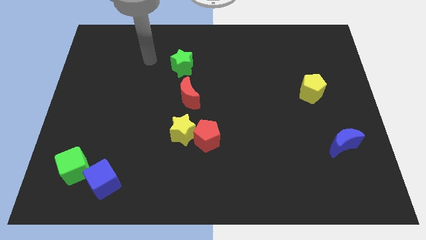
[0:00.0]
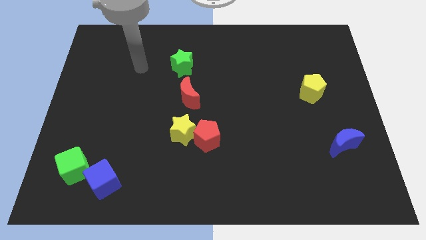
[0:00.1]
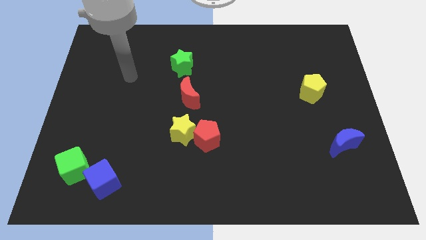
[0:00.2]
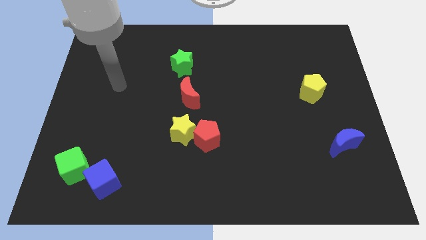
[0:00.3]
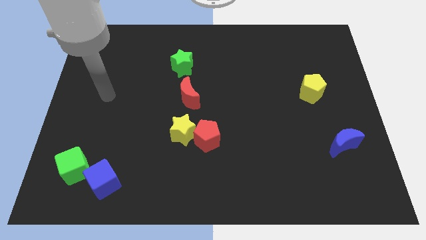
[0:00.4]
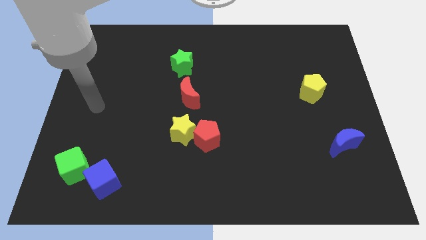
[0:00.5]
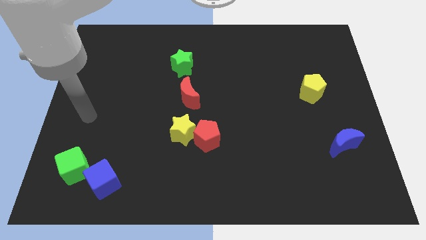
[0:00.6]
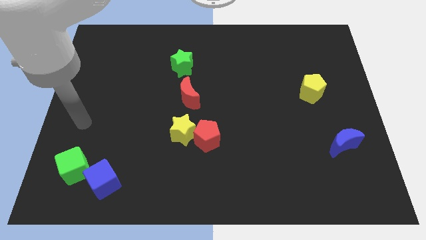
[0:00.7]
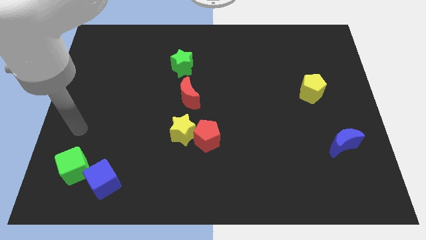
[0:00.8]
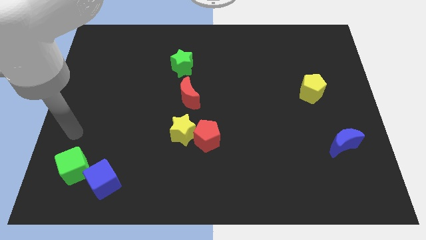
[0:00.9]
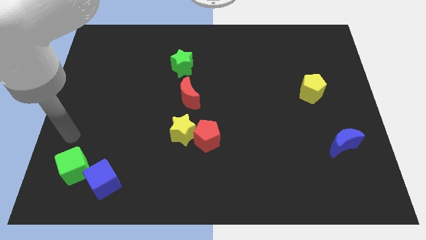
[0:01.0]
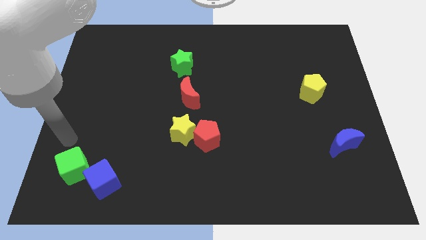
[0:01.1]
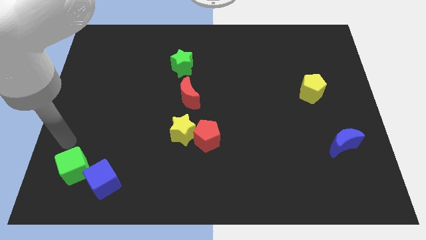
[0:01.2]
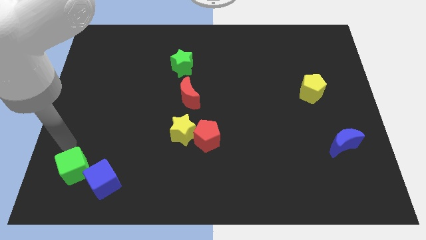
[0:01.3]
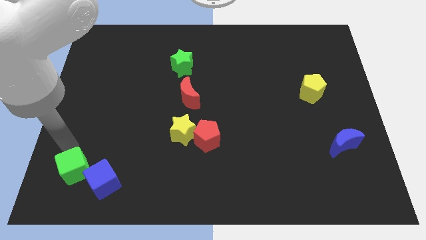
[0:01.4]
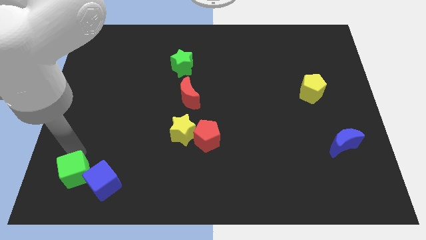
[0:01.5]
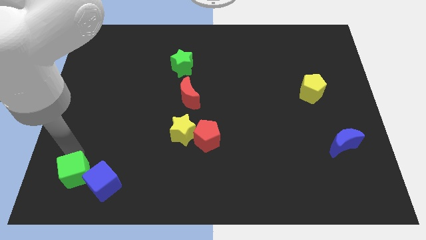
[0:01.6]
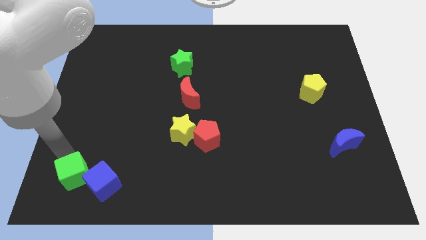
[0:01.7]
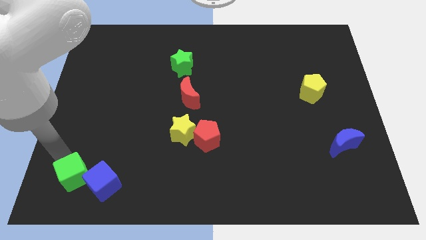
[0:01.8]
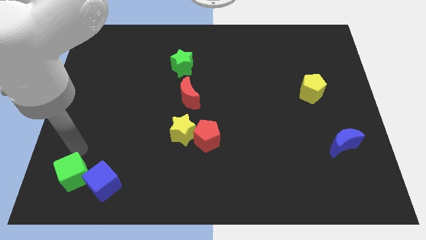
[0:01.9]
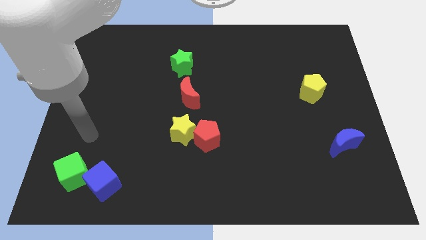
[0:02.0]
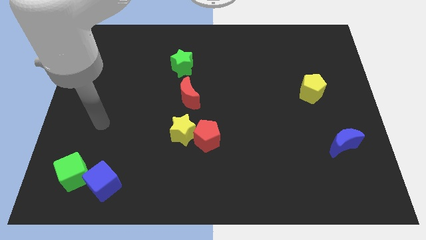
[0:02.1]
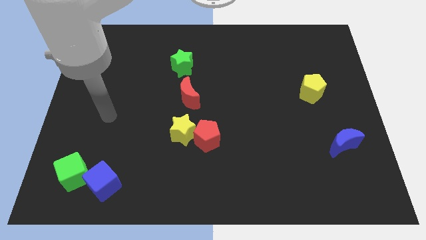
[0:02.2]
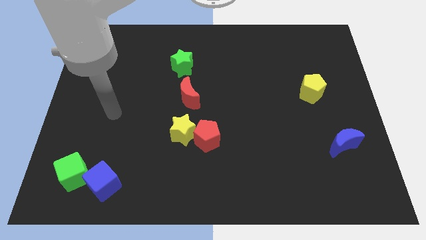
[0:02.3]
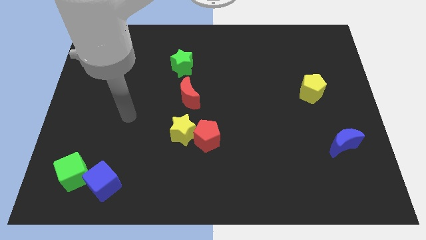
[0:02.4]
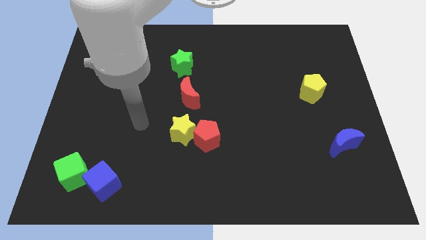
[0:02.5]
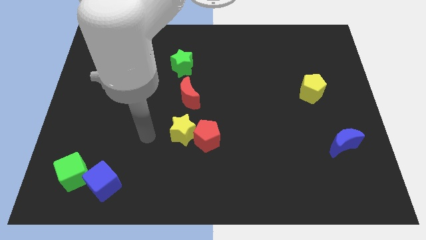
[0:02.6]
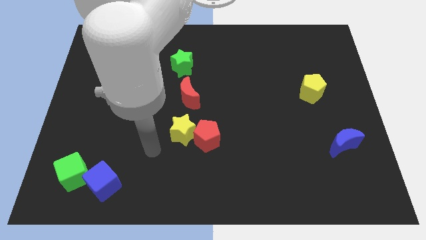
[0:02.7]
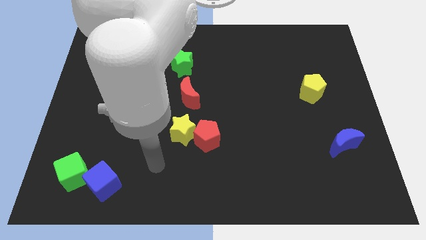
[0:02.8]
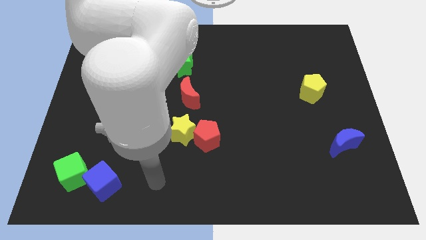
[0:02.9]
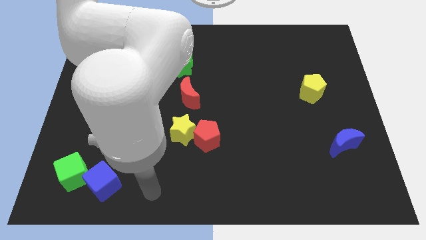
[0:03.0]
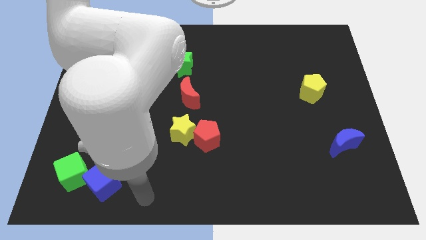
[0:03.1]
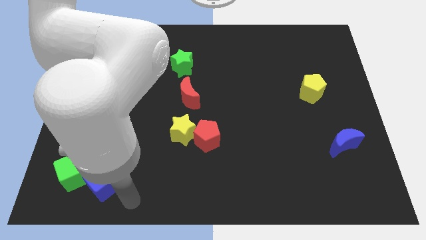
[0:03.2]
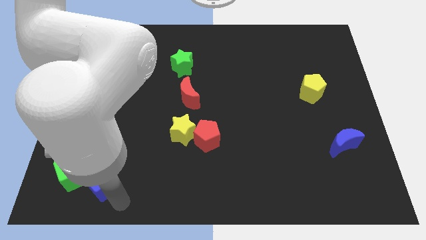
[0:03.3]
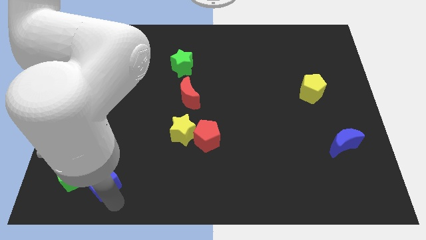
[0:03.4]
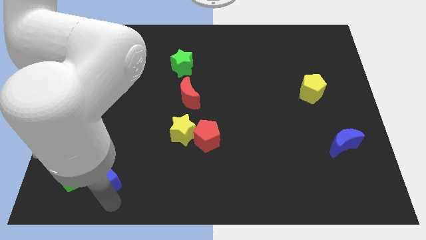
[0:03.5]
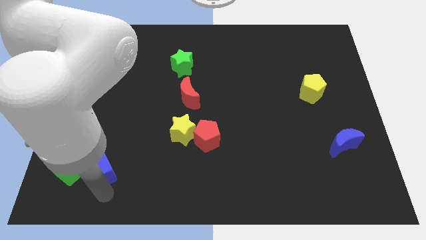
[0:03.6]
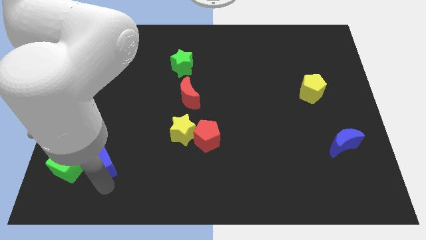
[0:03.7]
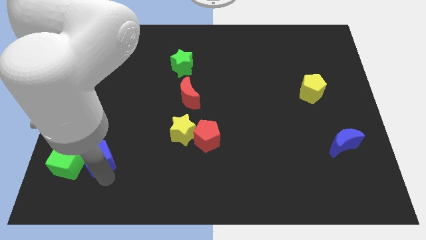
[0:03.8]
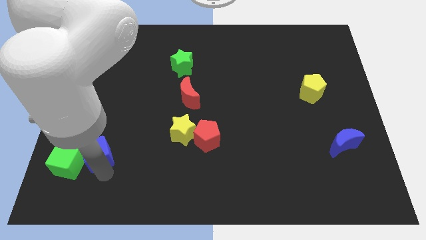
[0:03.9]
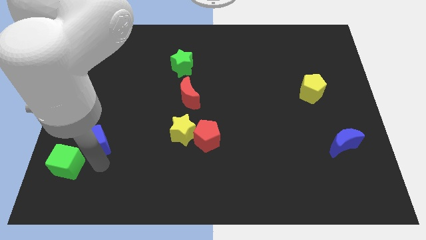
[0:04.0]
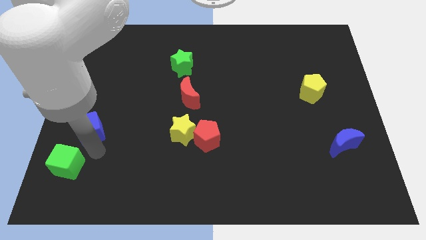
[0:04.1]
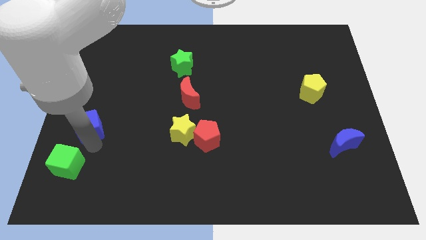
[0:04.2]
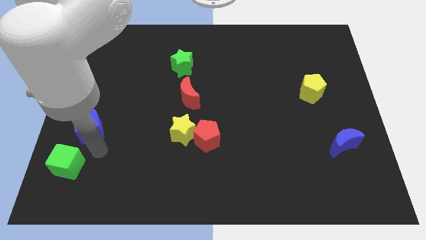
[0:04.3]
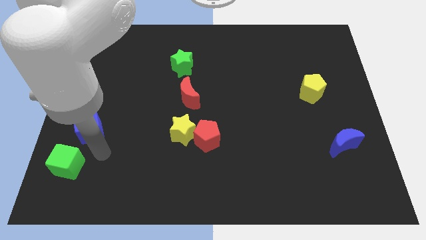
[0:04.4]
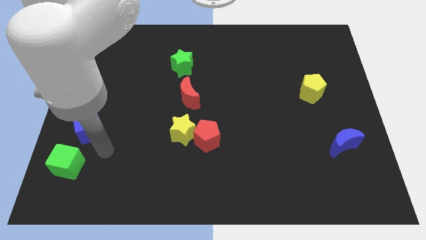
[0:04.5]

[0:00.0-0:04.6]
push the blue cube above the green cube

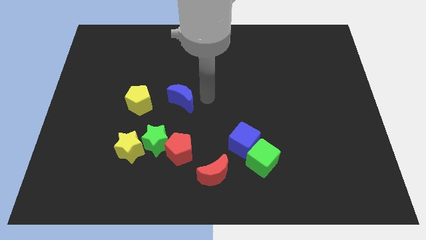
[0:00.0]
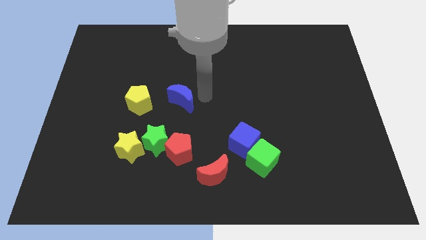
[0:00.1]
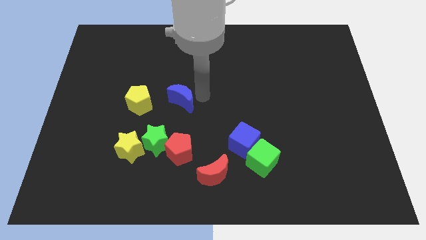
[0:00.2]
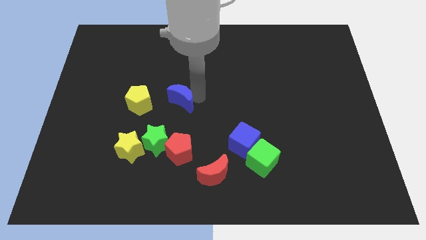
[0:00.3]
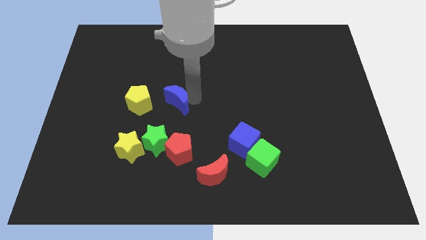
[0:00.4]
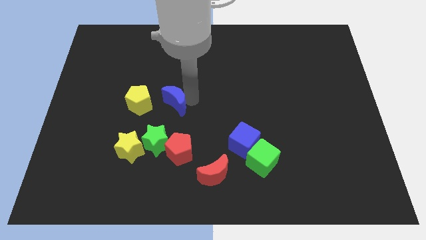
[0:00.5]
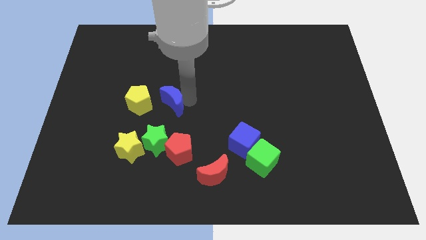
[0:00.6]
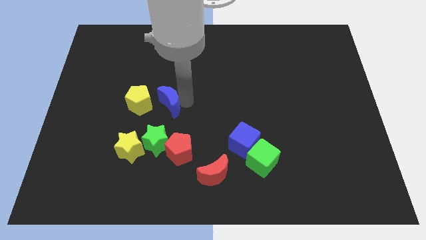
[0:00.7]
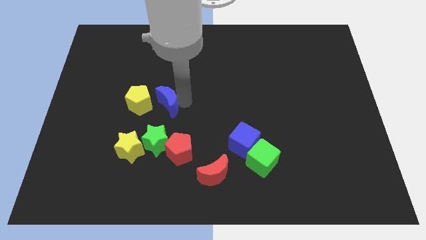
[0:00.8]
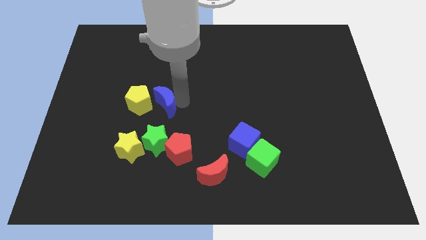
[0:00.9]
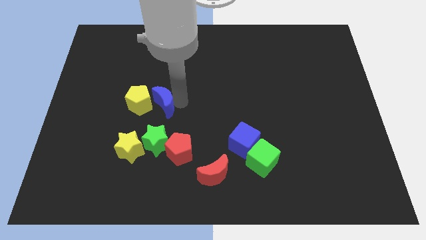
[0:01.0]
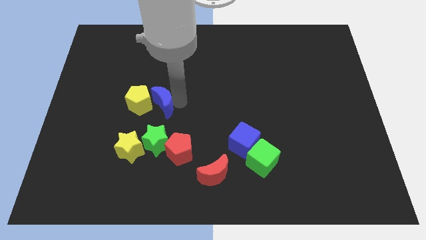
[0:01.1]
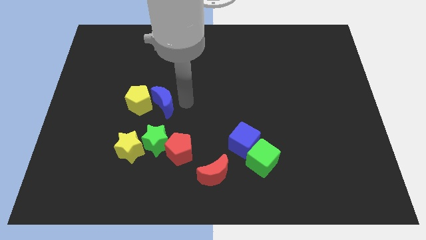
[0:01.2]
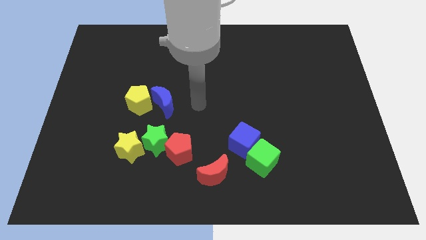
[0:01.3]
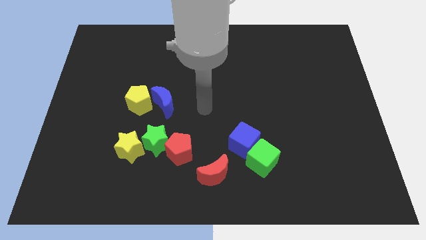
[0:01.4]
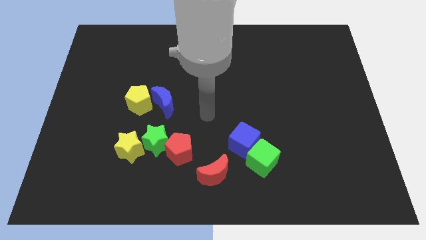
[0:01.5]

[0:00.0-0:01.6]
slide the blue crescent towards the yellow pentagon

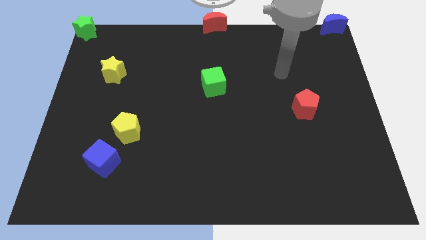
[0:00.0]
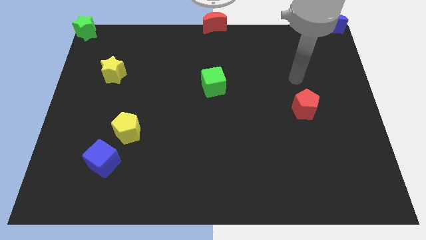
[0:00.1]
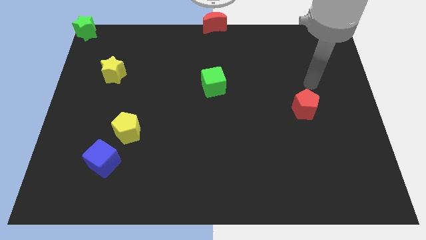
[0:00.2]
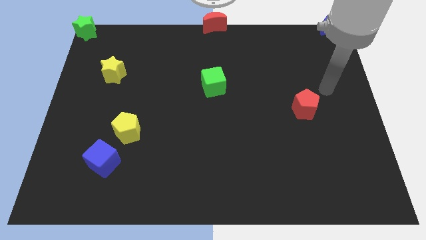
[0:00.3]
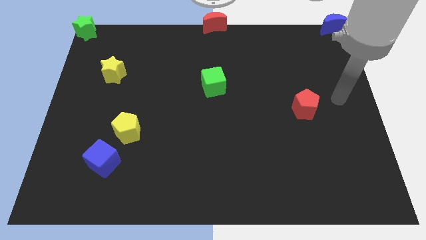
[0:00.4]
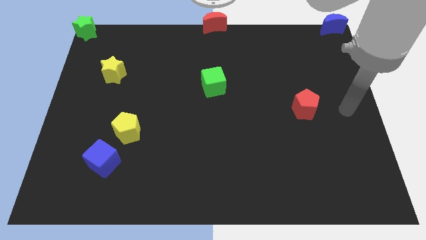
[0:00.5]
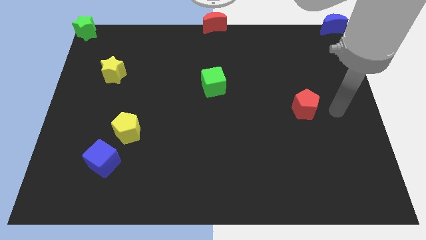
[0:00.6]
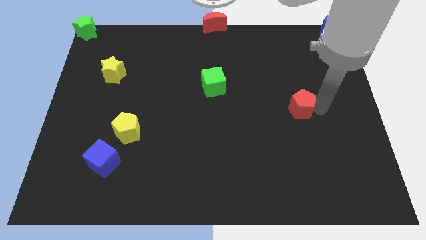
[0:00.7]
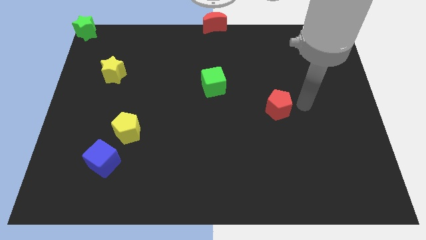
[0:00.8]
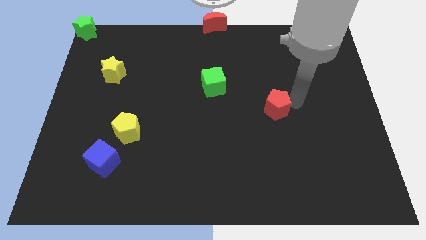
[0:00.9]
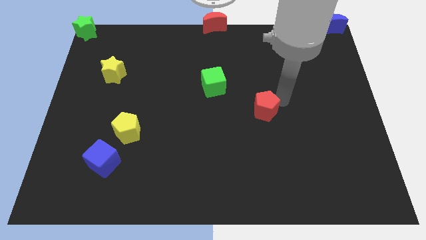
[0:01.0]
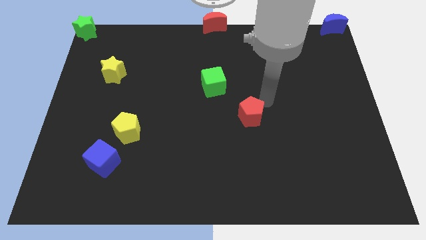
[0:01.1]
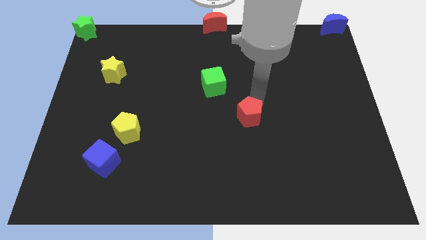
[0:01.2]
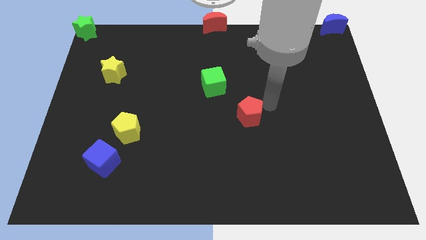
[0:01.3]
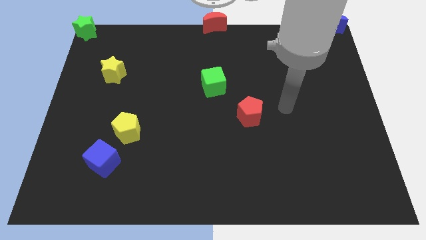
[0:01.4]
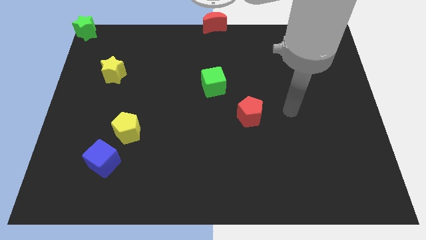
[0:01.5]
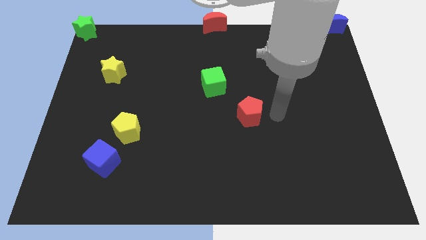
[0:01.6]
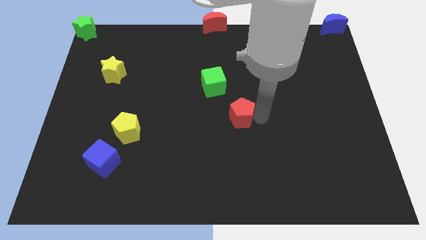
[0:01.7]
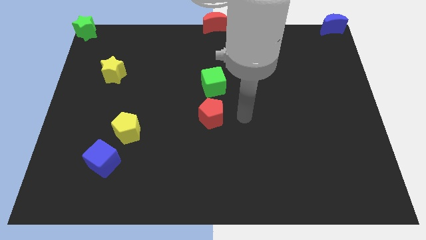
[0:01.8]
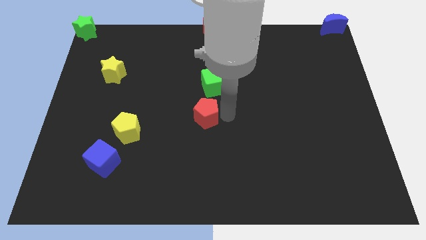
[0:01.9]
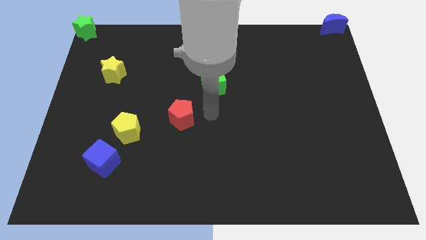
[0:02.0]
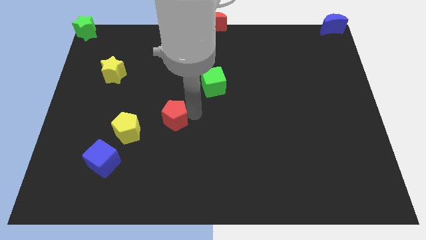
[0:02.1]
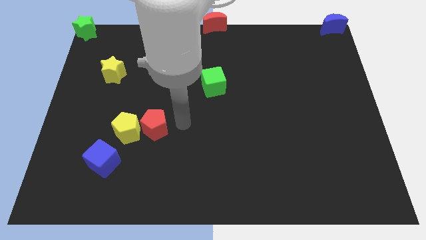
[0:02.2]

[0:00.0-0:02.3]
push the red pentagon to the right of the yellow pentagon

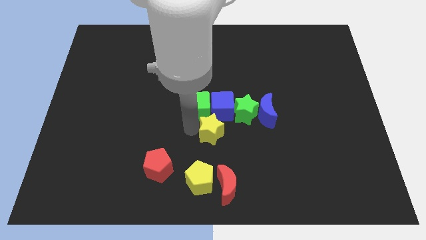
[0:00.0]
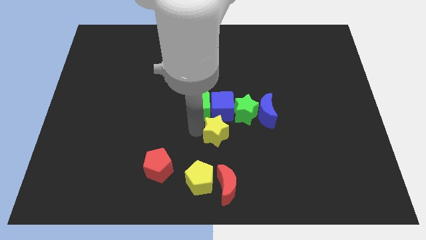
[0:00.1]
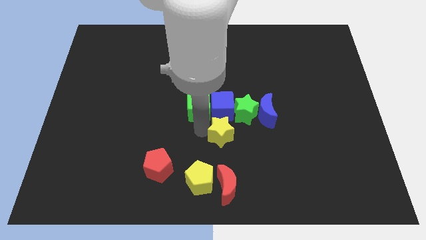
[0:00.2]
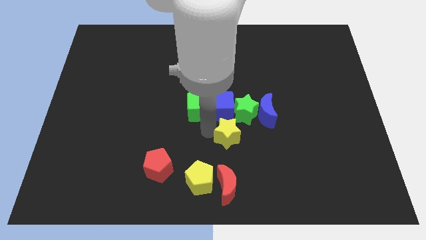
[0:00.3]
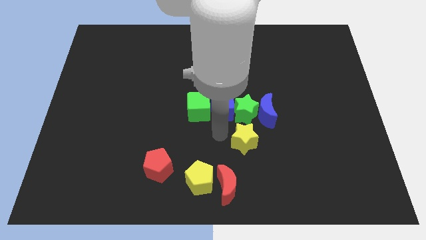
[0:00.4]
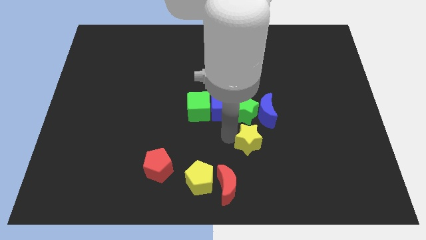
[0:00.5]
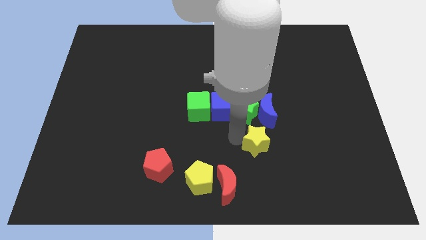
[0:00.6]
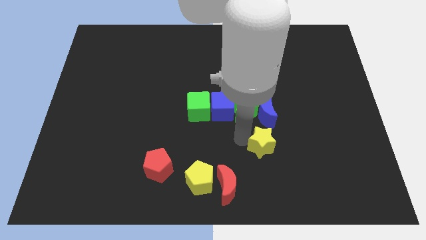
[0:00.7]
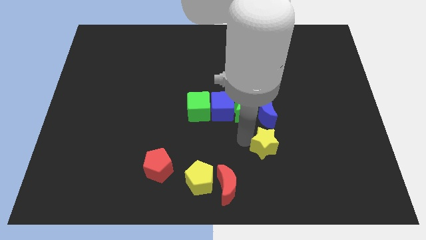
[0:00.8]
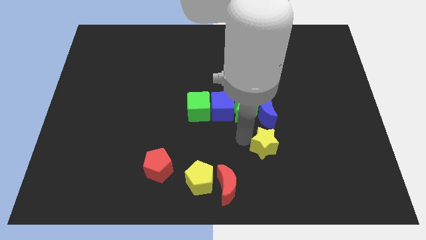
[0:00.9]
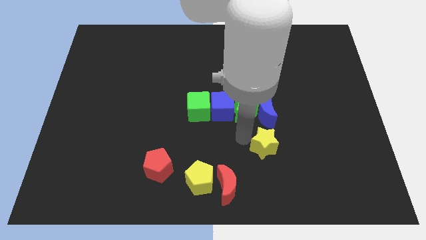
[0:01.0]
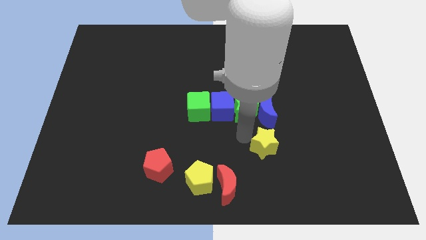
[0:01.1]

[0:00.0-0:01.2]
place the yellow star to the bottom of blue crescent
